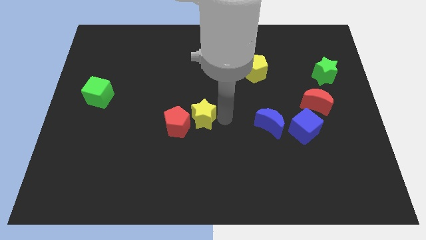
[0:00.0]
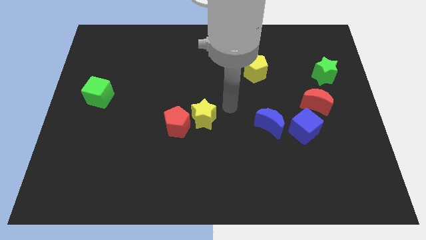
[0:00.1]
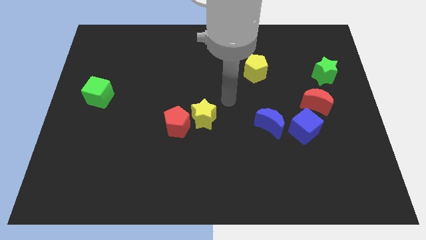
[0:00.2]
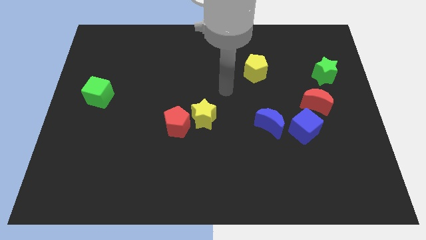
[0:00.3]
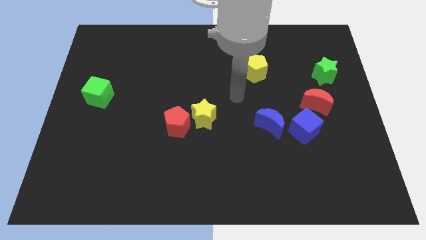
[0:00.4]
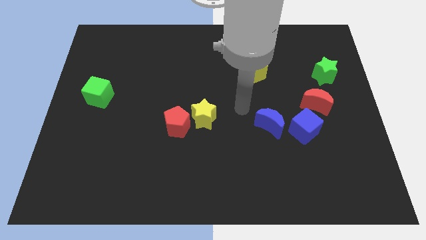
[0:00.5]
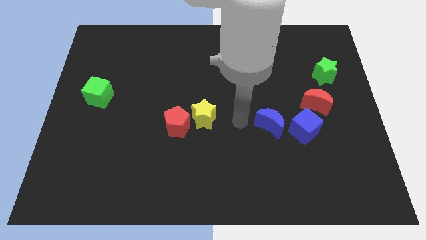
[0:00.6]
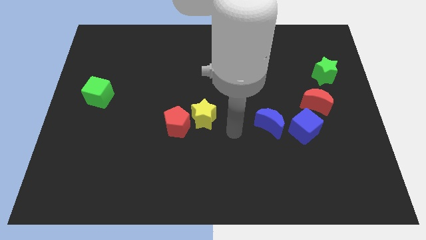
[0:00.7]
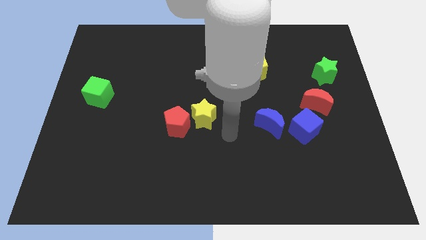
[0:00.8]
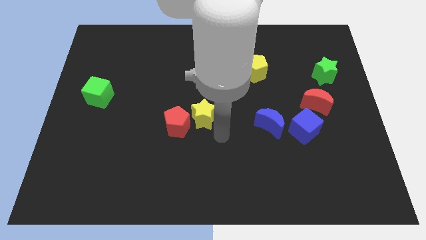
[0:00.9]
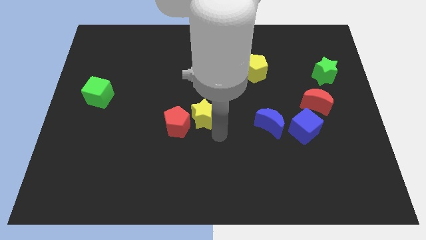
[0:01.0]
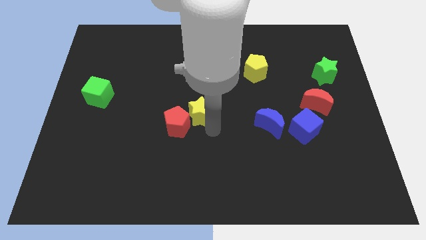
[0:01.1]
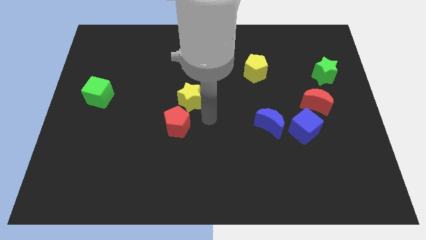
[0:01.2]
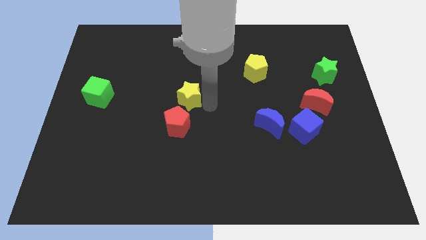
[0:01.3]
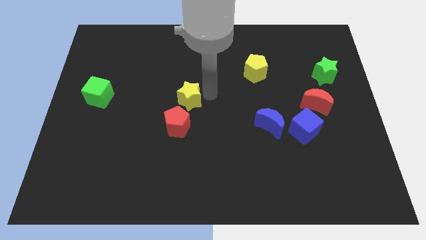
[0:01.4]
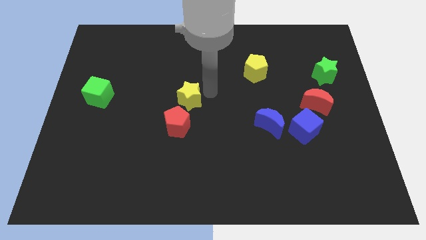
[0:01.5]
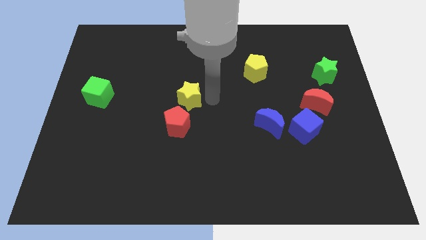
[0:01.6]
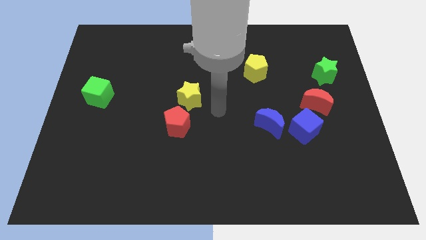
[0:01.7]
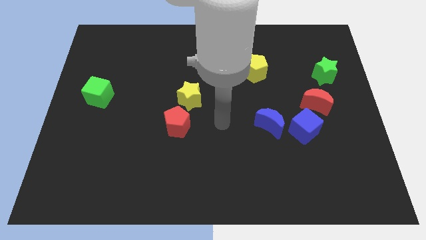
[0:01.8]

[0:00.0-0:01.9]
push the yellow star above the red pentagon

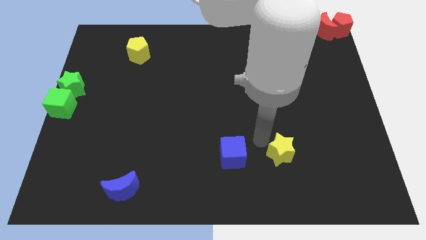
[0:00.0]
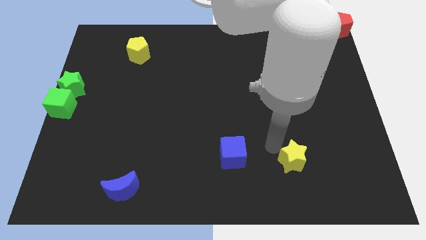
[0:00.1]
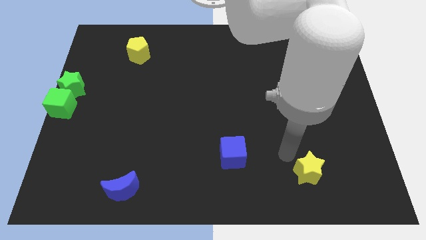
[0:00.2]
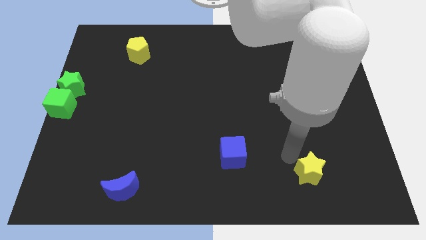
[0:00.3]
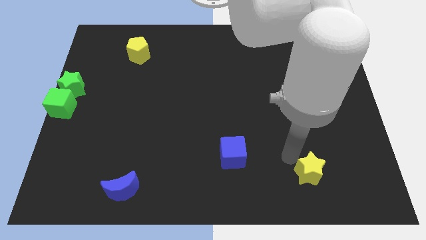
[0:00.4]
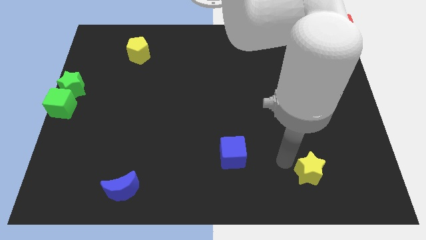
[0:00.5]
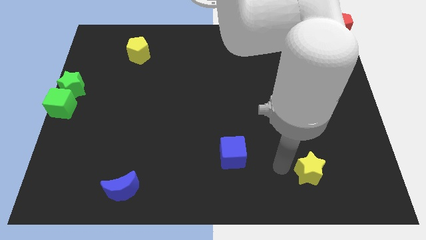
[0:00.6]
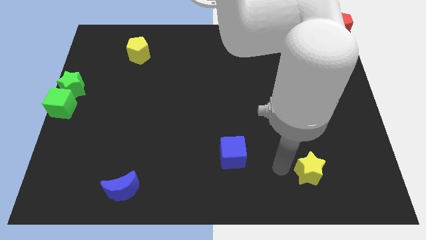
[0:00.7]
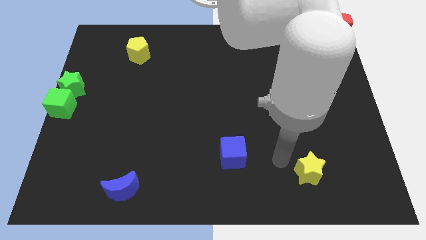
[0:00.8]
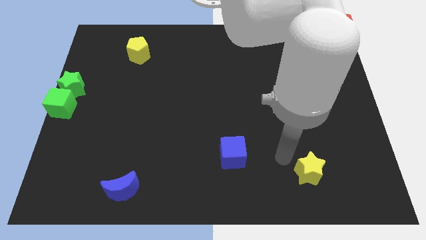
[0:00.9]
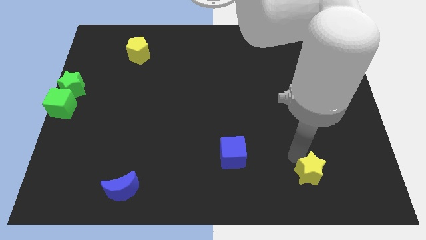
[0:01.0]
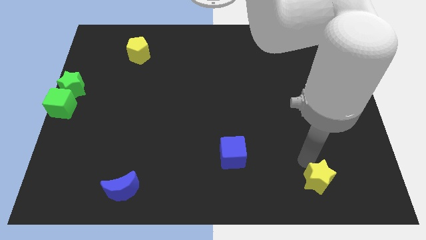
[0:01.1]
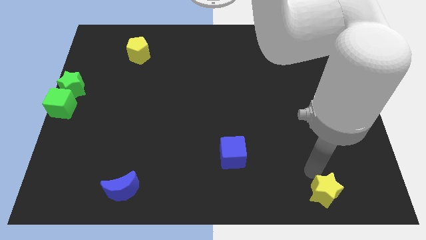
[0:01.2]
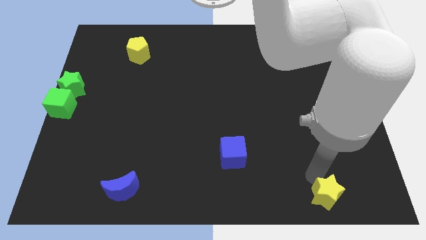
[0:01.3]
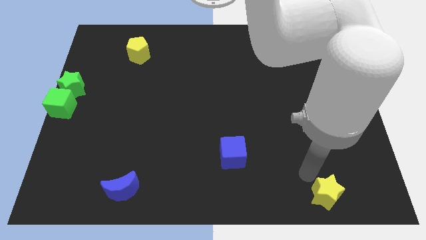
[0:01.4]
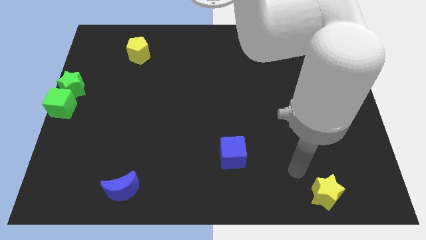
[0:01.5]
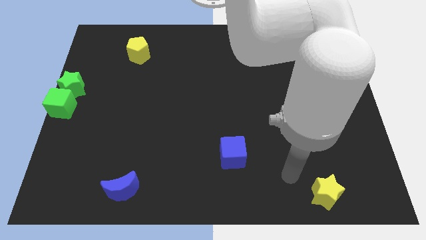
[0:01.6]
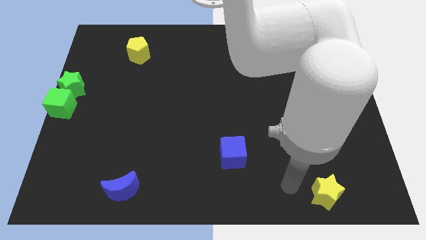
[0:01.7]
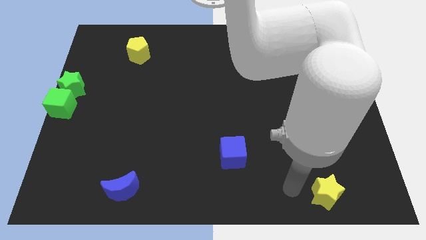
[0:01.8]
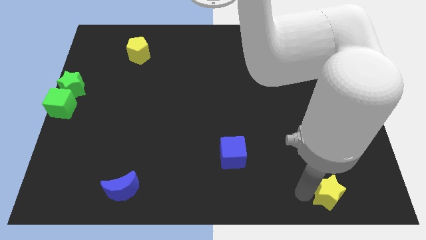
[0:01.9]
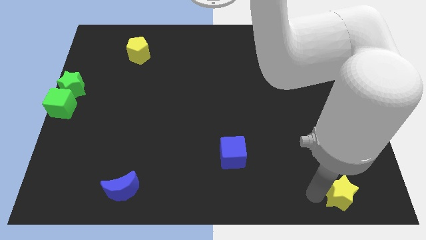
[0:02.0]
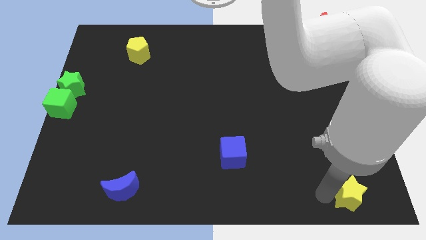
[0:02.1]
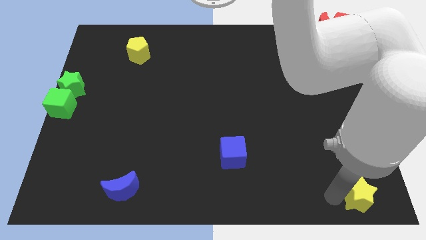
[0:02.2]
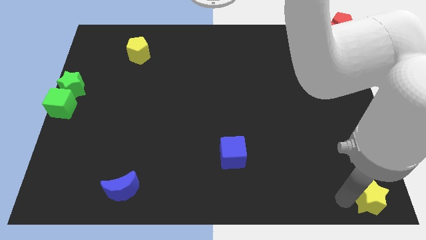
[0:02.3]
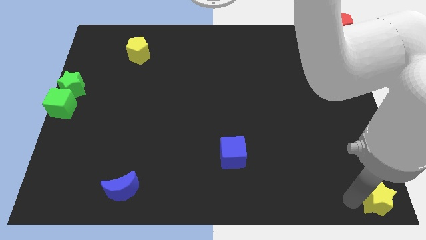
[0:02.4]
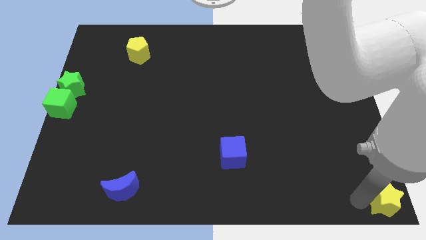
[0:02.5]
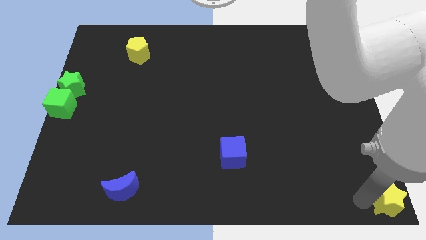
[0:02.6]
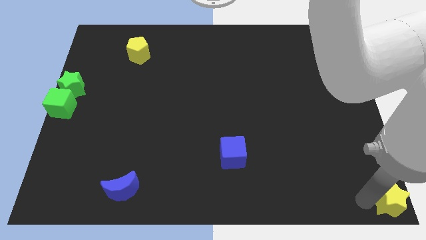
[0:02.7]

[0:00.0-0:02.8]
move the yellow star to the right bottom corner

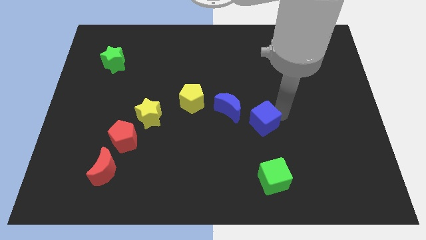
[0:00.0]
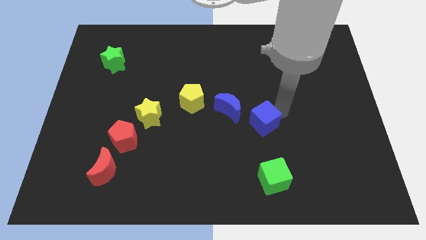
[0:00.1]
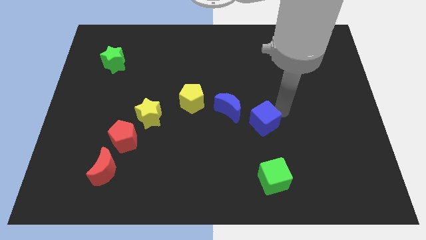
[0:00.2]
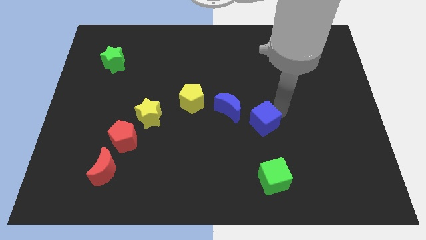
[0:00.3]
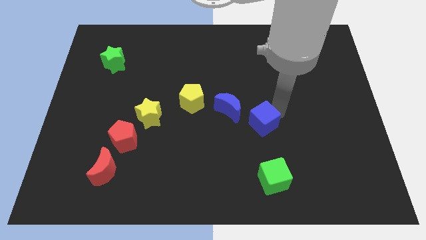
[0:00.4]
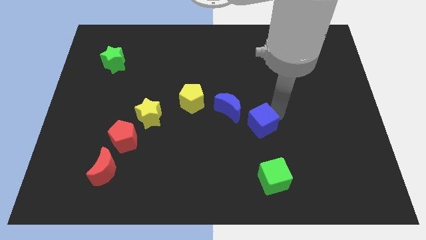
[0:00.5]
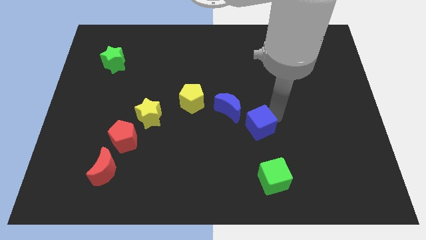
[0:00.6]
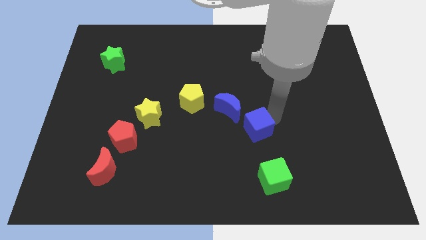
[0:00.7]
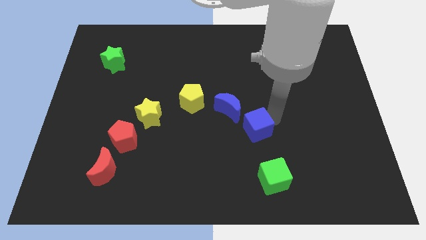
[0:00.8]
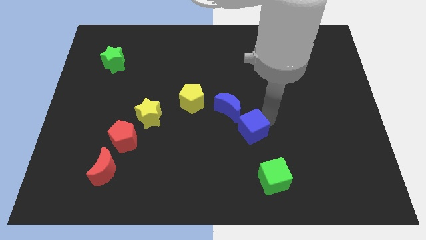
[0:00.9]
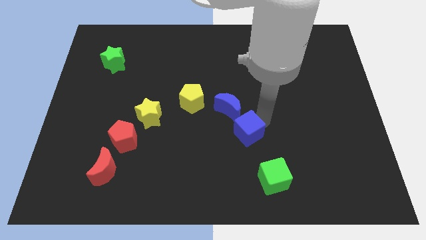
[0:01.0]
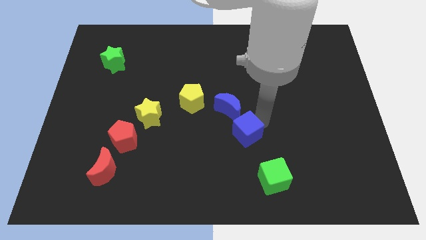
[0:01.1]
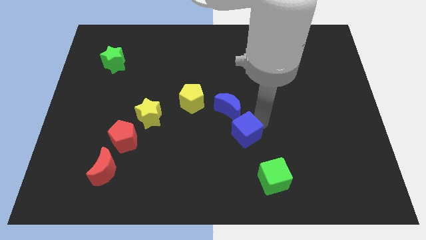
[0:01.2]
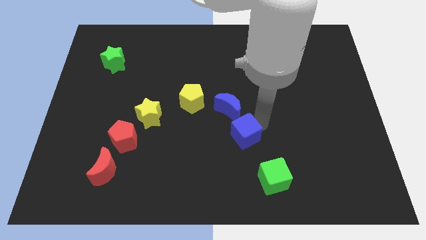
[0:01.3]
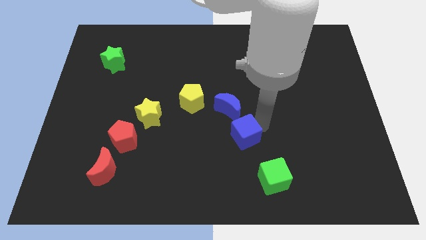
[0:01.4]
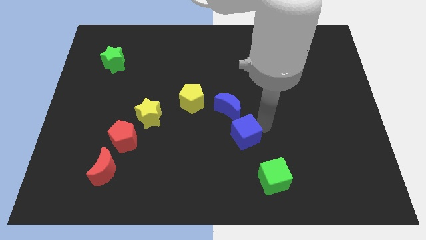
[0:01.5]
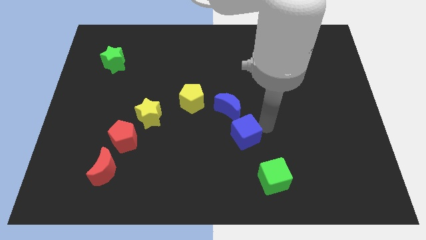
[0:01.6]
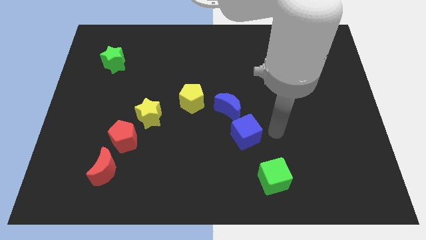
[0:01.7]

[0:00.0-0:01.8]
place the blue cube in between the blue crescent and the green cube

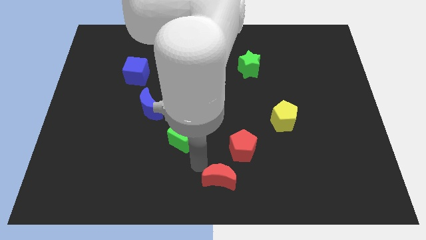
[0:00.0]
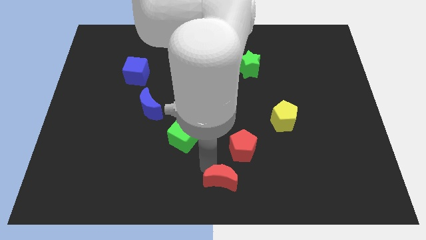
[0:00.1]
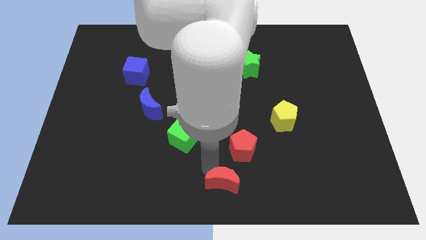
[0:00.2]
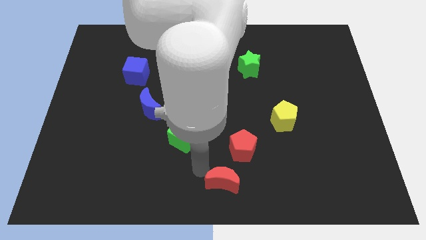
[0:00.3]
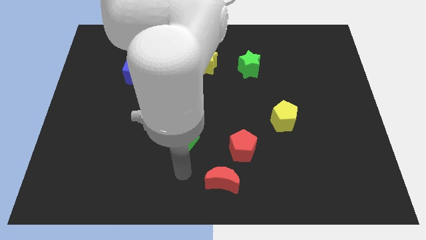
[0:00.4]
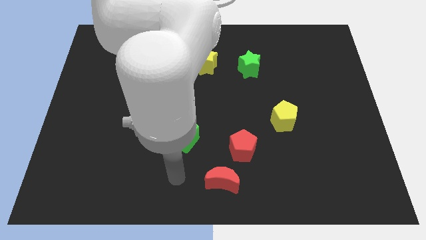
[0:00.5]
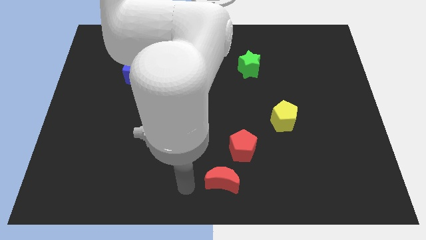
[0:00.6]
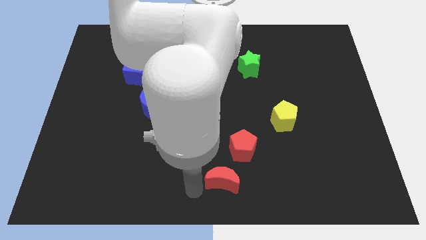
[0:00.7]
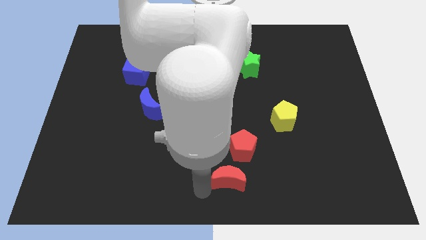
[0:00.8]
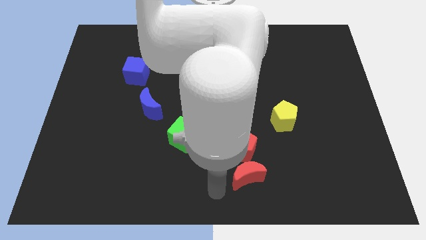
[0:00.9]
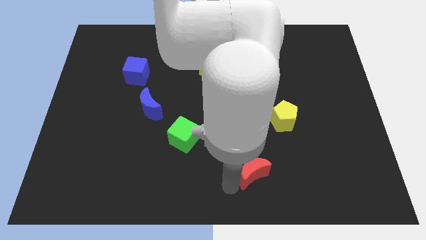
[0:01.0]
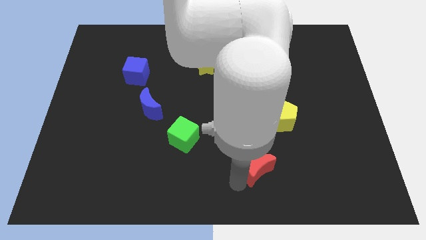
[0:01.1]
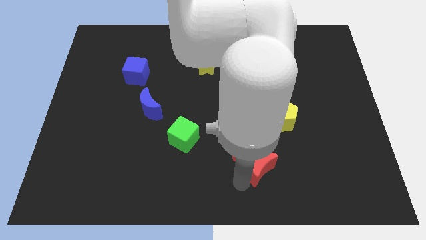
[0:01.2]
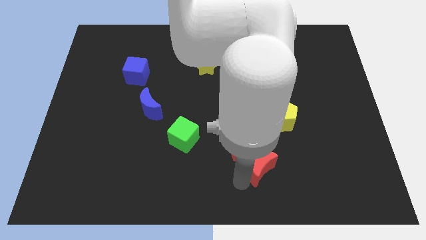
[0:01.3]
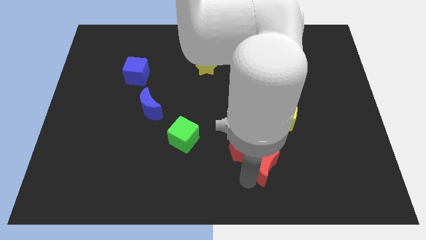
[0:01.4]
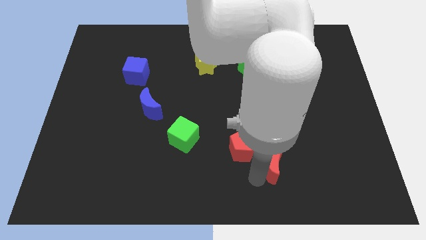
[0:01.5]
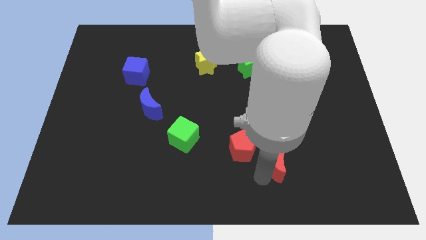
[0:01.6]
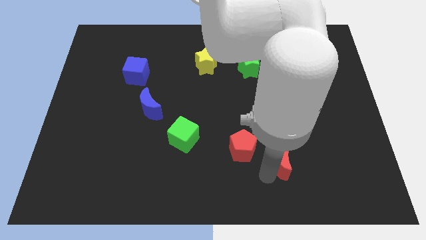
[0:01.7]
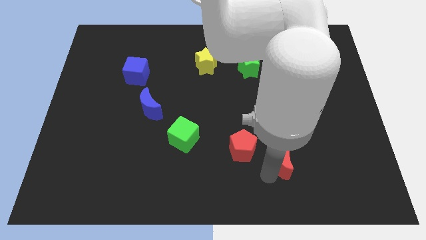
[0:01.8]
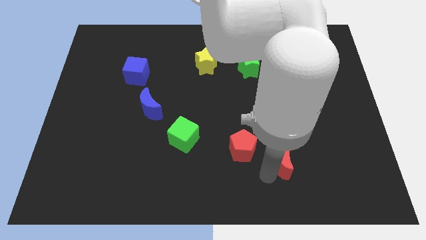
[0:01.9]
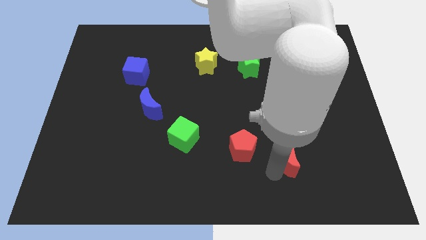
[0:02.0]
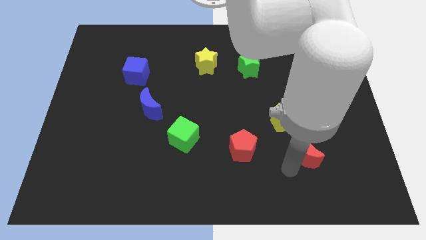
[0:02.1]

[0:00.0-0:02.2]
put the red moon underneath the yellow pentagon

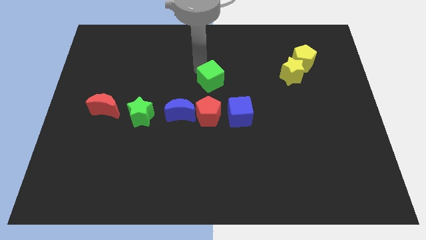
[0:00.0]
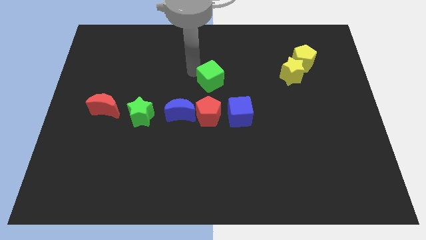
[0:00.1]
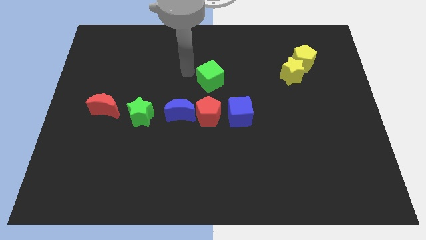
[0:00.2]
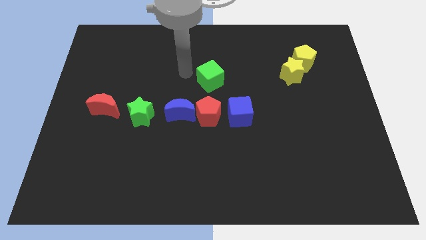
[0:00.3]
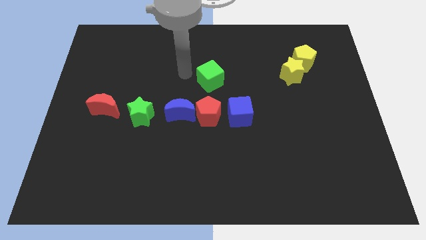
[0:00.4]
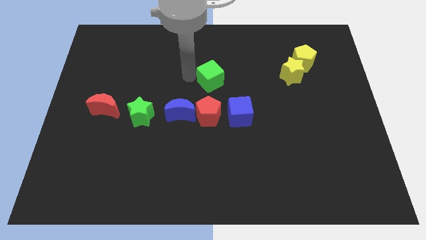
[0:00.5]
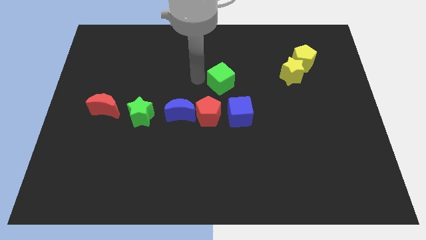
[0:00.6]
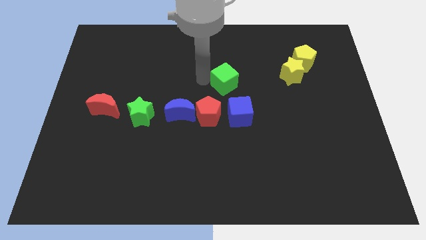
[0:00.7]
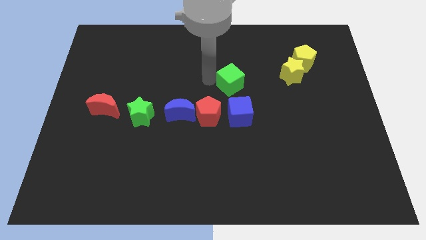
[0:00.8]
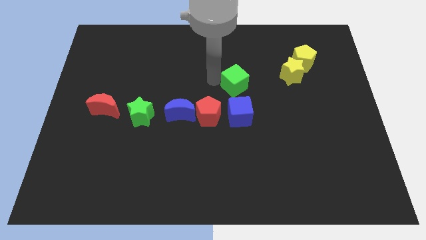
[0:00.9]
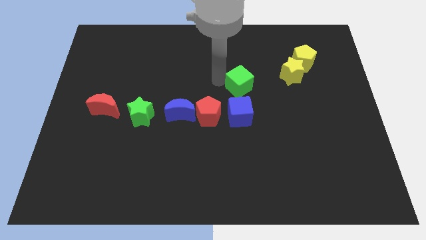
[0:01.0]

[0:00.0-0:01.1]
place green cube on top of blue cube
